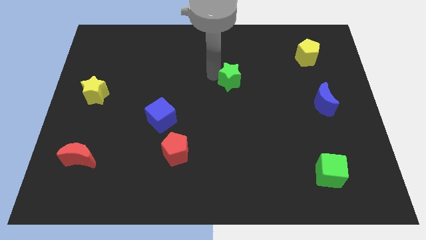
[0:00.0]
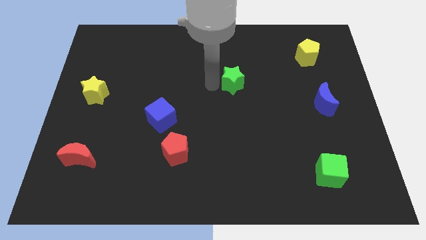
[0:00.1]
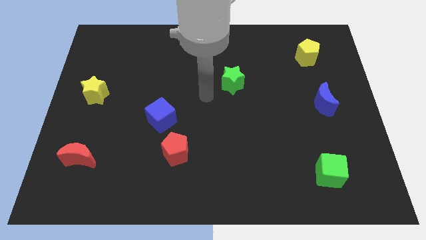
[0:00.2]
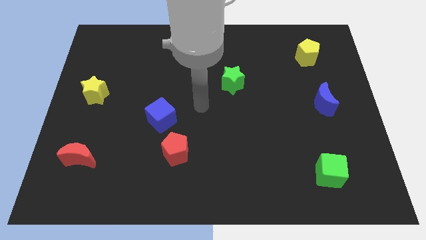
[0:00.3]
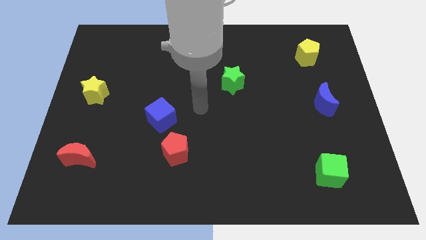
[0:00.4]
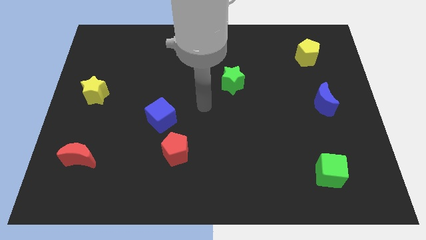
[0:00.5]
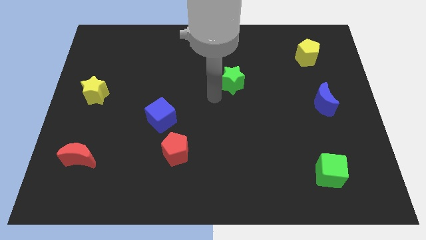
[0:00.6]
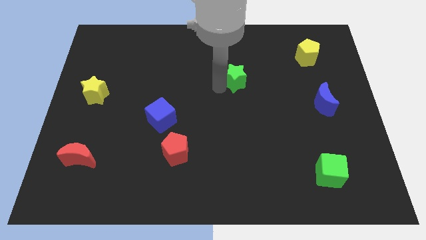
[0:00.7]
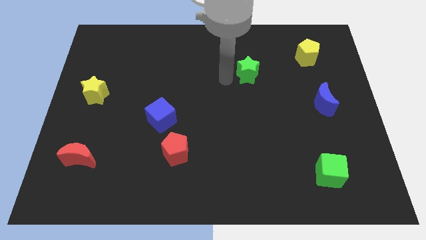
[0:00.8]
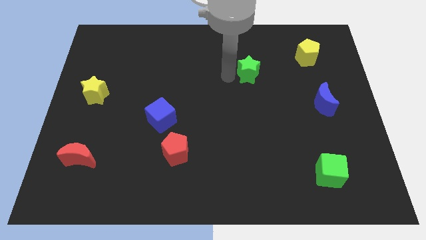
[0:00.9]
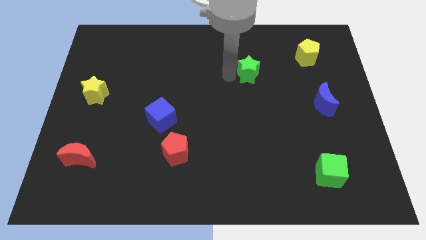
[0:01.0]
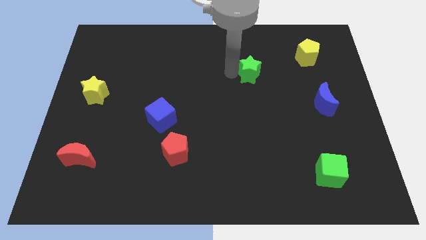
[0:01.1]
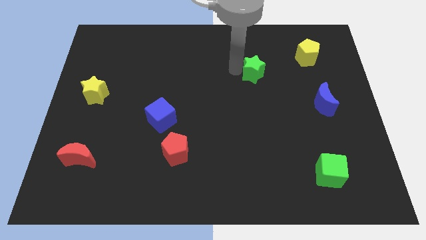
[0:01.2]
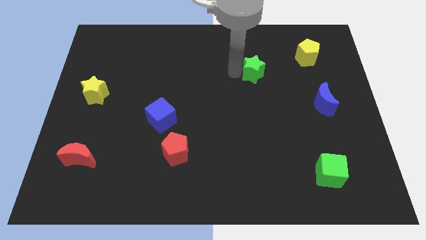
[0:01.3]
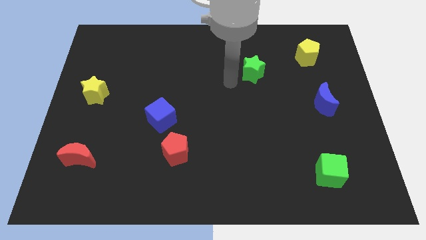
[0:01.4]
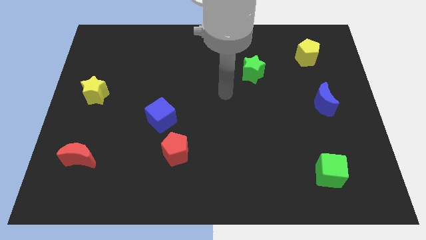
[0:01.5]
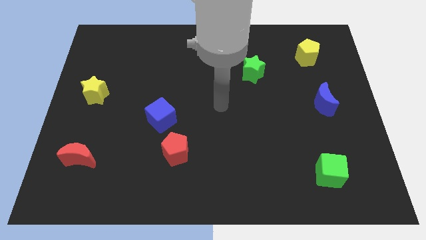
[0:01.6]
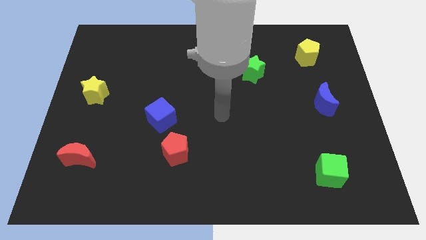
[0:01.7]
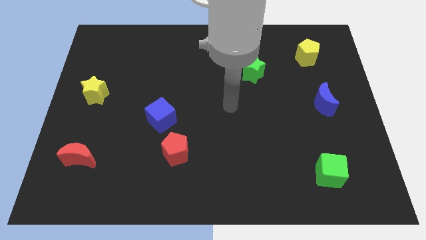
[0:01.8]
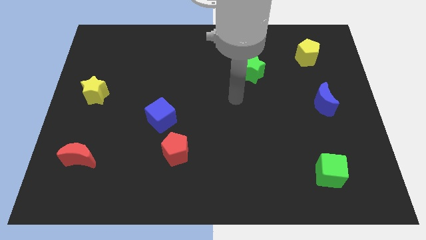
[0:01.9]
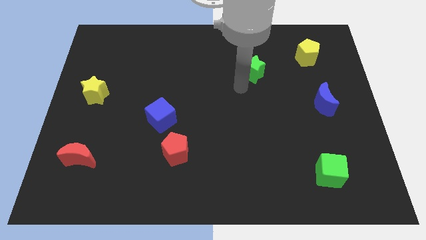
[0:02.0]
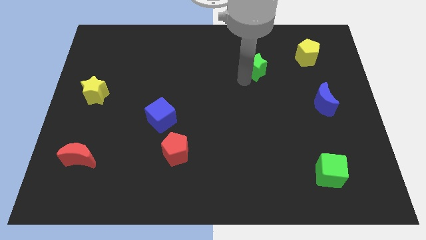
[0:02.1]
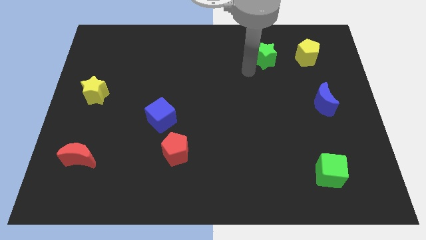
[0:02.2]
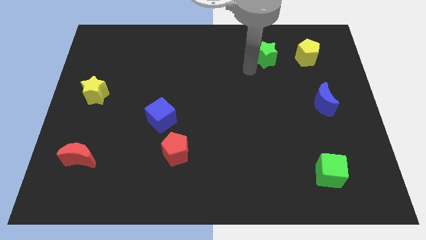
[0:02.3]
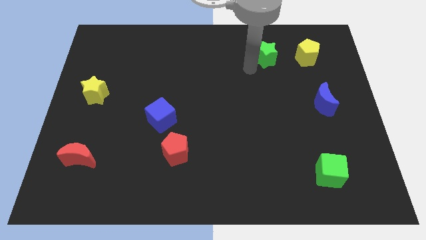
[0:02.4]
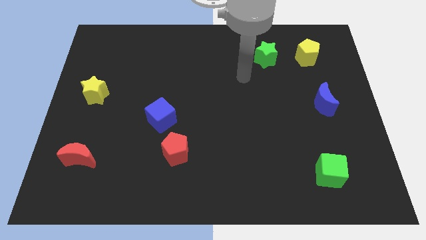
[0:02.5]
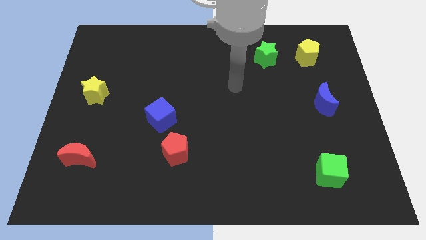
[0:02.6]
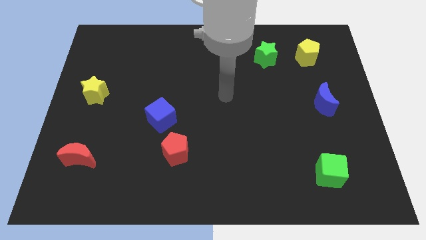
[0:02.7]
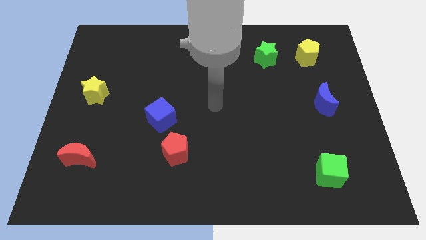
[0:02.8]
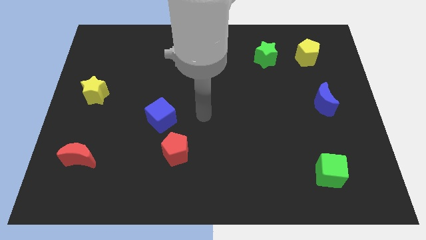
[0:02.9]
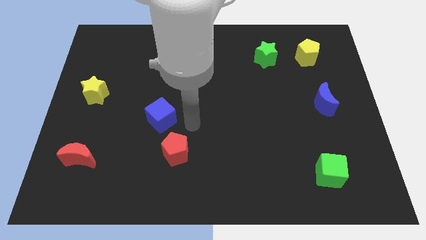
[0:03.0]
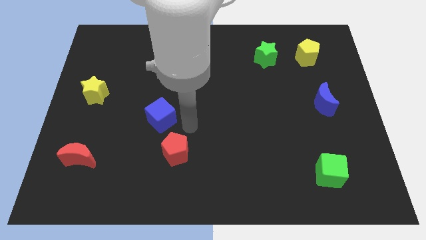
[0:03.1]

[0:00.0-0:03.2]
push the green star parallel left to the yellow pentagon

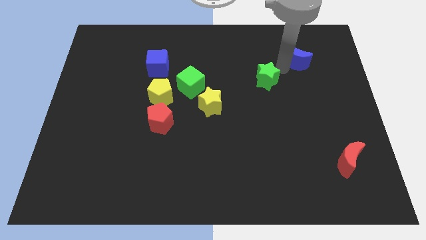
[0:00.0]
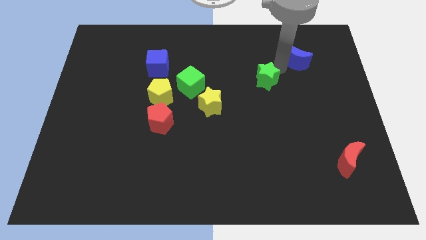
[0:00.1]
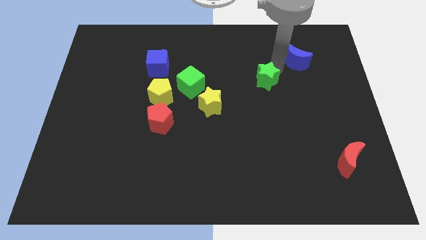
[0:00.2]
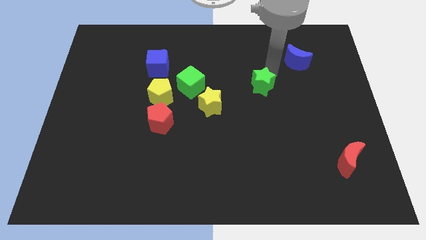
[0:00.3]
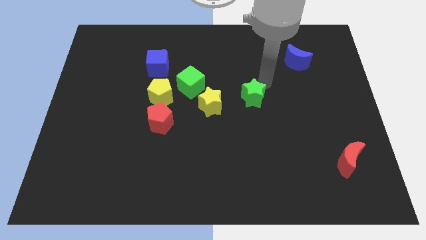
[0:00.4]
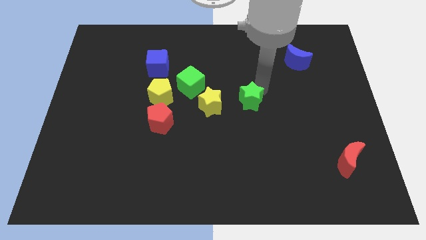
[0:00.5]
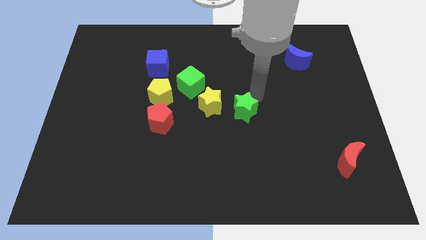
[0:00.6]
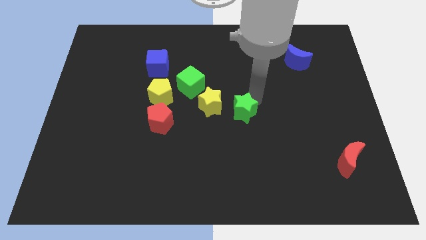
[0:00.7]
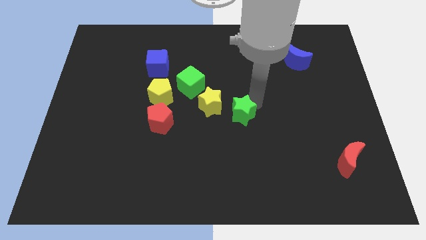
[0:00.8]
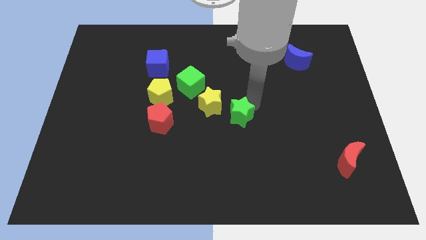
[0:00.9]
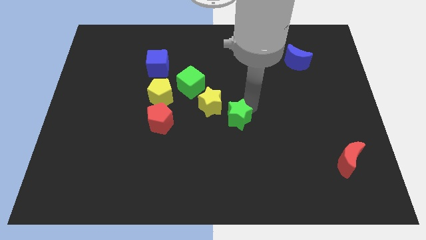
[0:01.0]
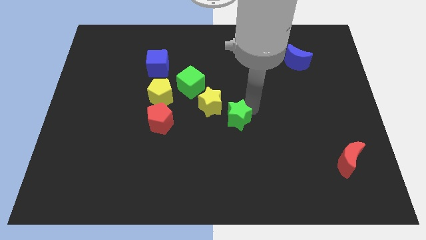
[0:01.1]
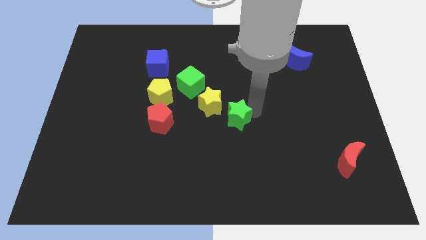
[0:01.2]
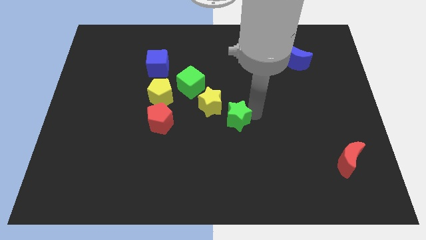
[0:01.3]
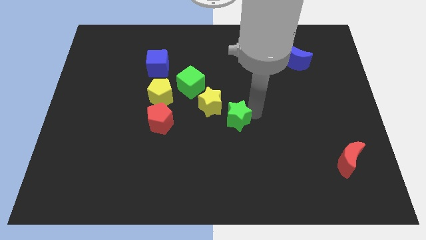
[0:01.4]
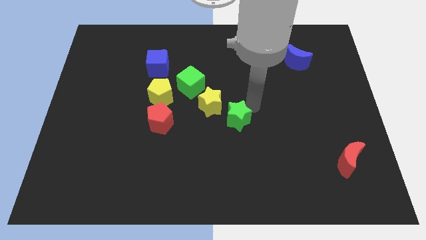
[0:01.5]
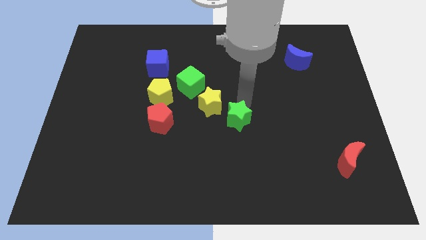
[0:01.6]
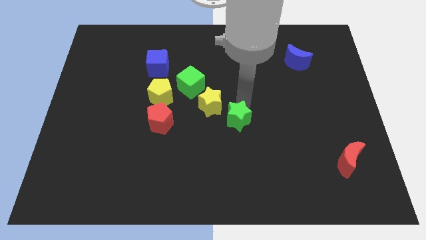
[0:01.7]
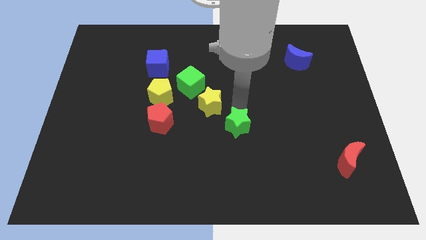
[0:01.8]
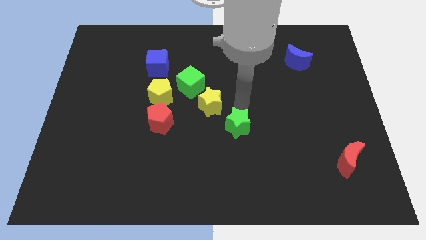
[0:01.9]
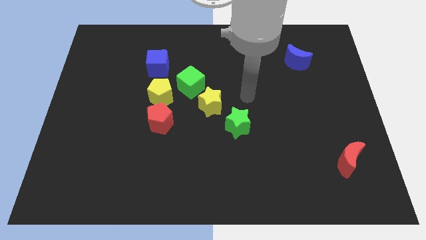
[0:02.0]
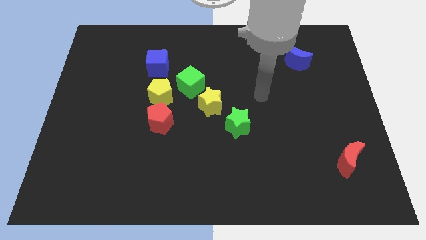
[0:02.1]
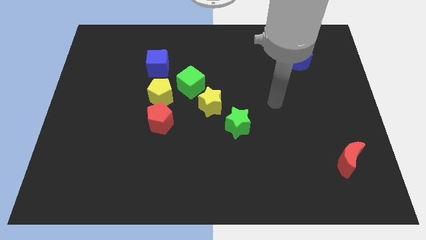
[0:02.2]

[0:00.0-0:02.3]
move the green star right diagonal to yellow star

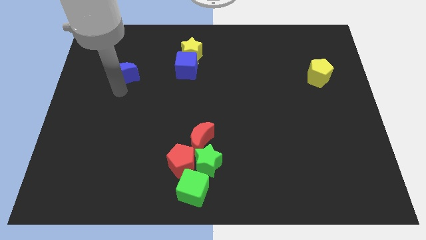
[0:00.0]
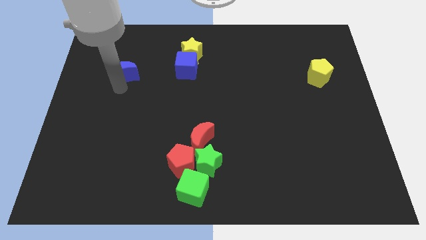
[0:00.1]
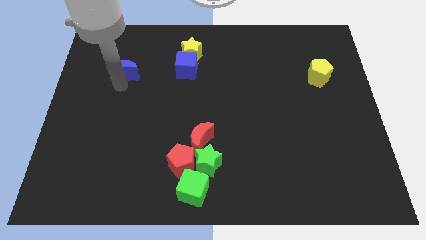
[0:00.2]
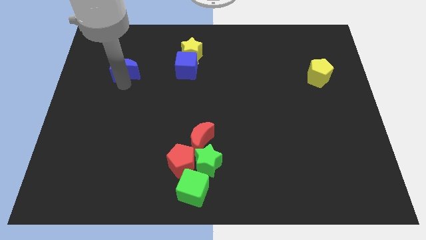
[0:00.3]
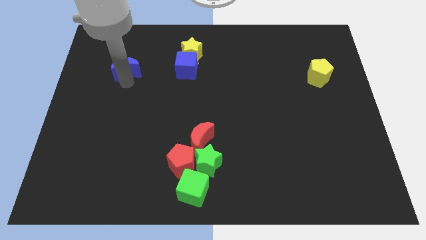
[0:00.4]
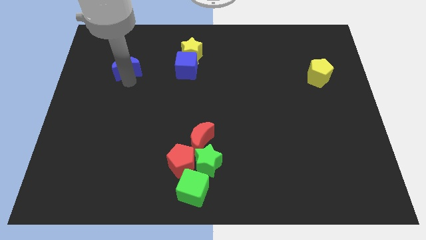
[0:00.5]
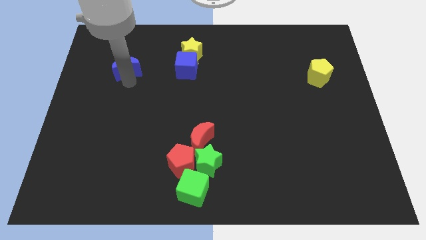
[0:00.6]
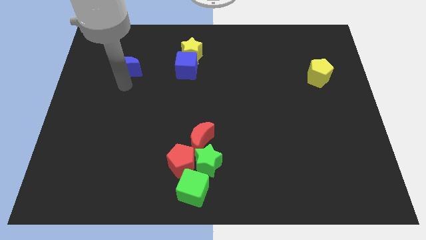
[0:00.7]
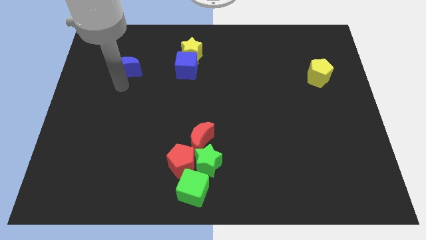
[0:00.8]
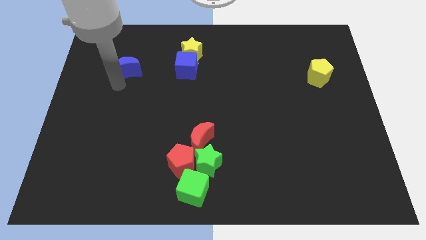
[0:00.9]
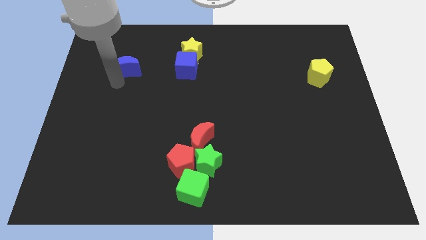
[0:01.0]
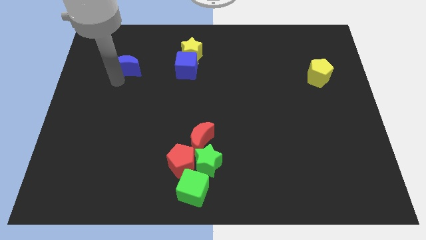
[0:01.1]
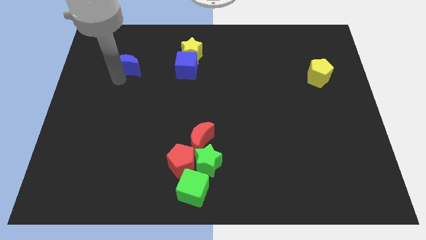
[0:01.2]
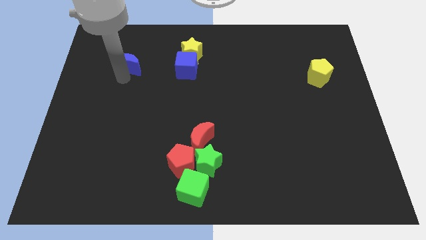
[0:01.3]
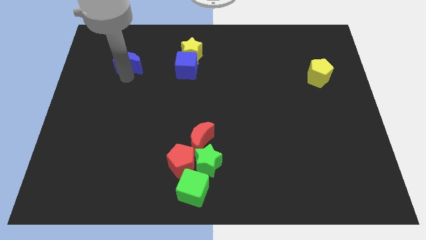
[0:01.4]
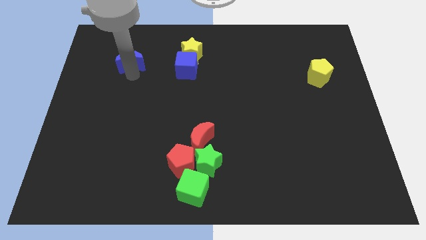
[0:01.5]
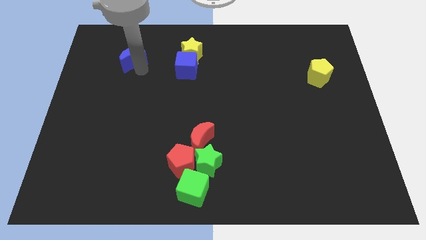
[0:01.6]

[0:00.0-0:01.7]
move blue crescent to the left of the blue cube

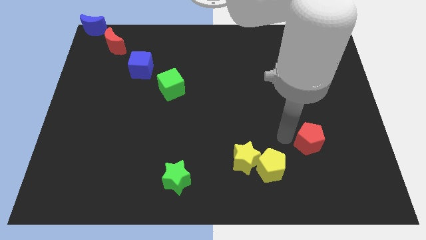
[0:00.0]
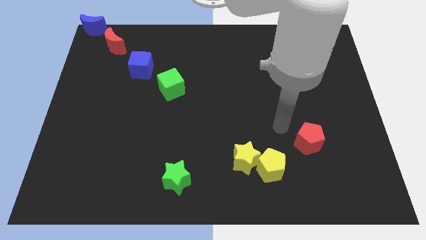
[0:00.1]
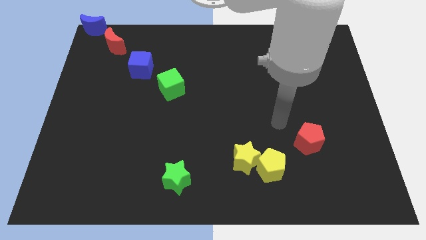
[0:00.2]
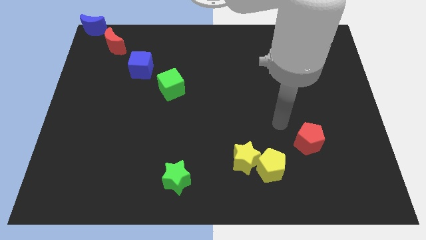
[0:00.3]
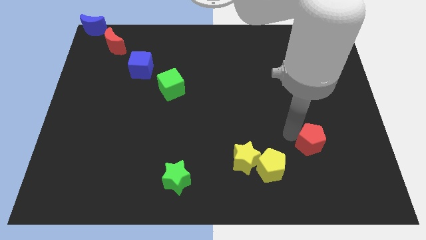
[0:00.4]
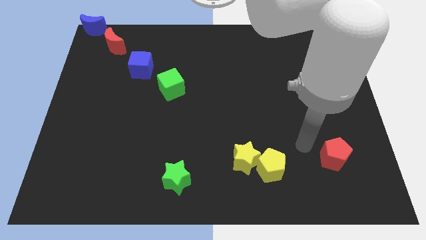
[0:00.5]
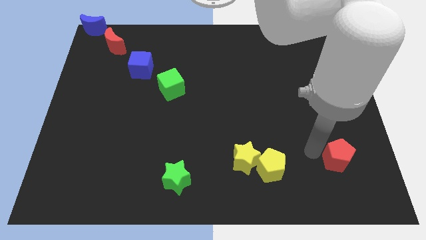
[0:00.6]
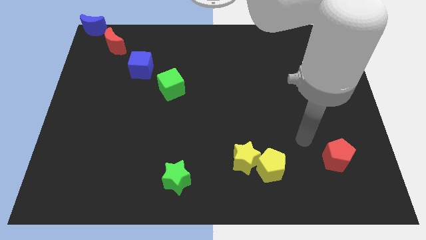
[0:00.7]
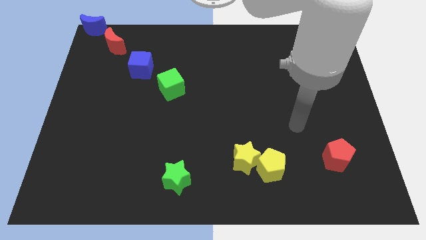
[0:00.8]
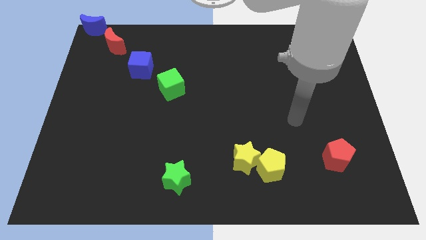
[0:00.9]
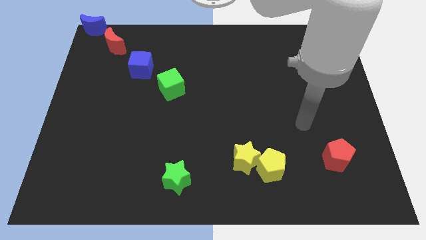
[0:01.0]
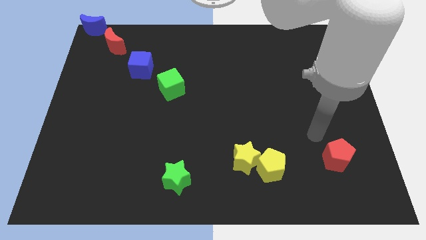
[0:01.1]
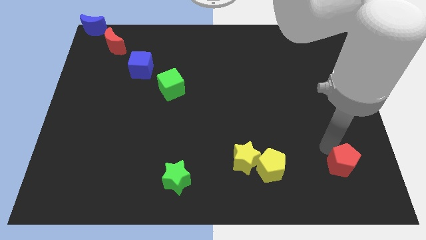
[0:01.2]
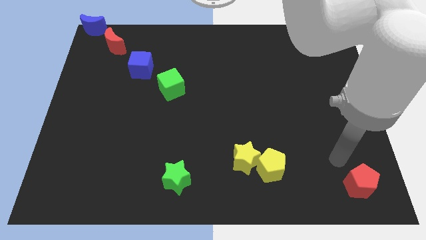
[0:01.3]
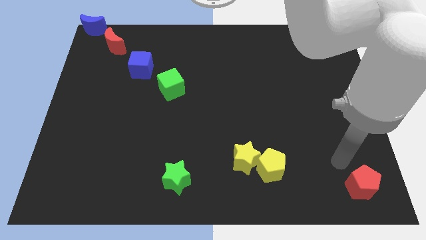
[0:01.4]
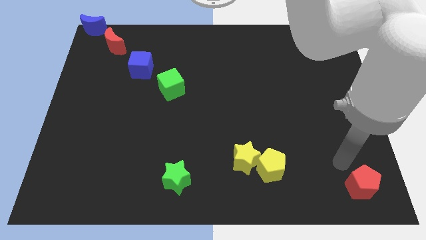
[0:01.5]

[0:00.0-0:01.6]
push the red pentagon to the bottom right corner of the board

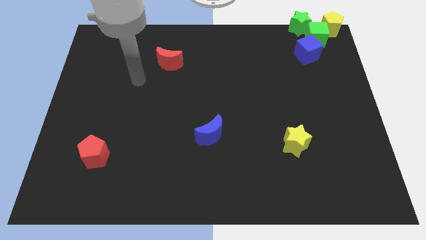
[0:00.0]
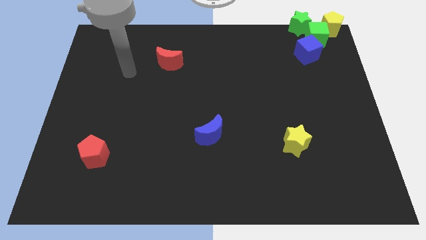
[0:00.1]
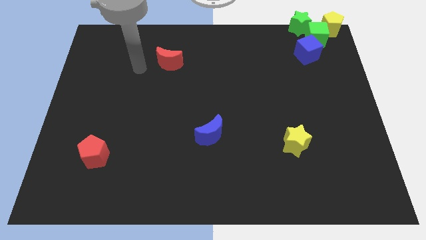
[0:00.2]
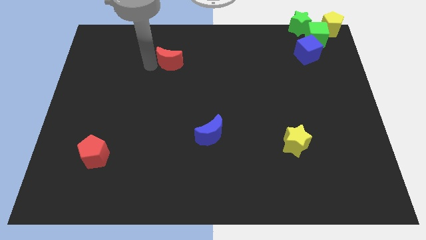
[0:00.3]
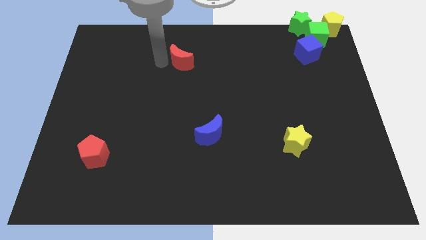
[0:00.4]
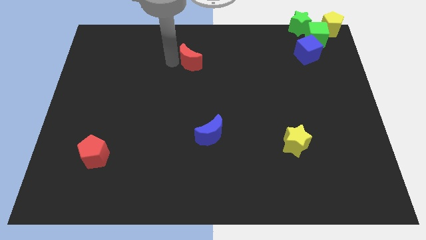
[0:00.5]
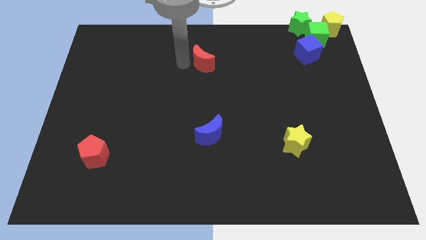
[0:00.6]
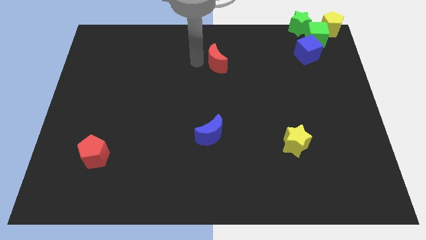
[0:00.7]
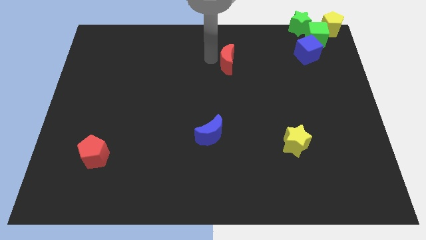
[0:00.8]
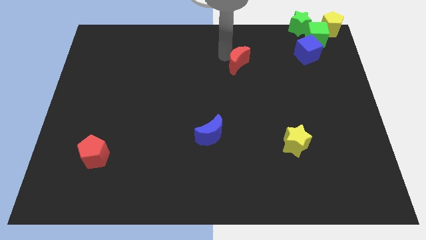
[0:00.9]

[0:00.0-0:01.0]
move the red crescent to the right
